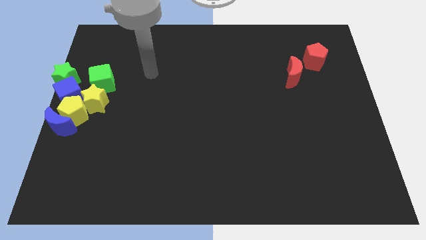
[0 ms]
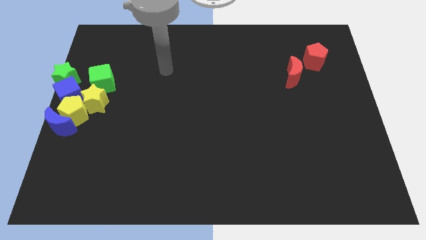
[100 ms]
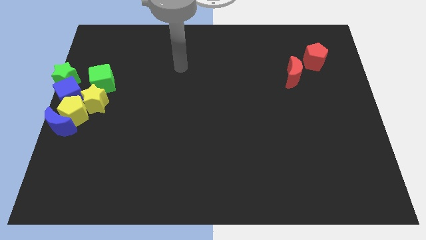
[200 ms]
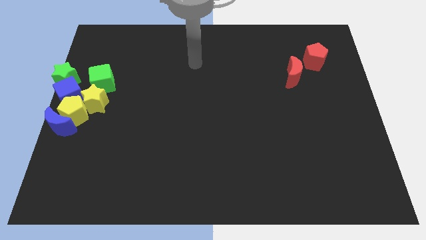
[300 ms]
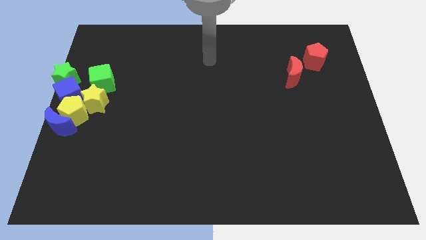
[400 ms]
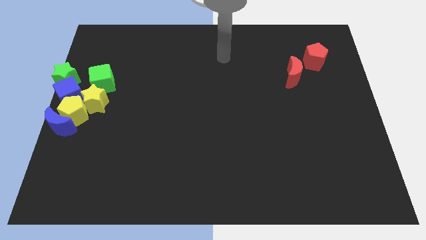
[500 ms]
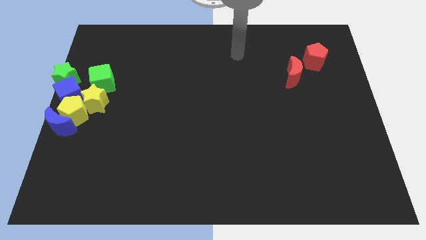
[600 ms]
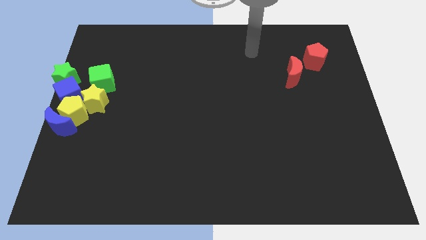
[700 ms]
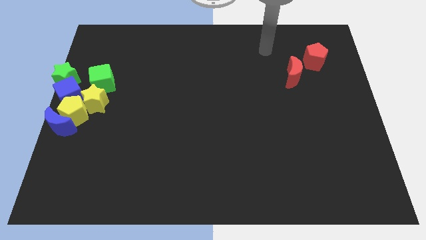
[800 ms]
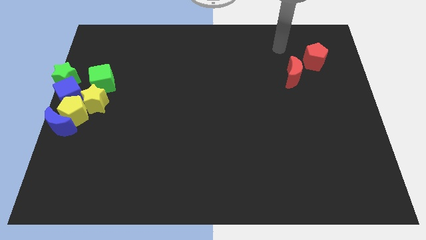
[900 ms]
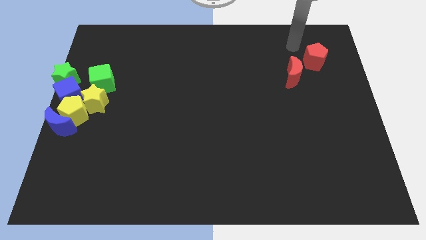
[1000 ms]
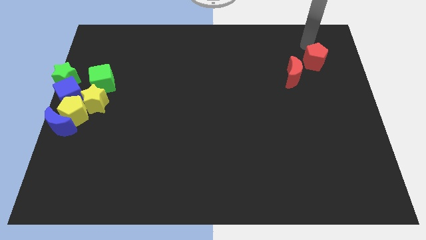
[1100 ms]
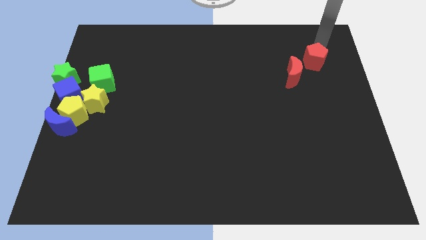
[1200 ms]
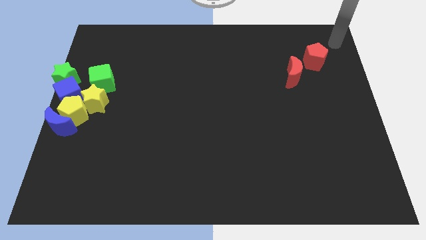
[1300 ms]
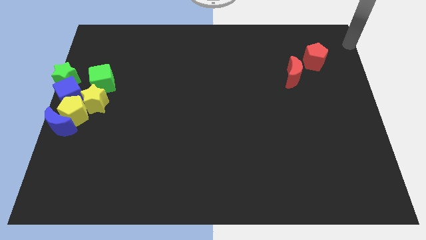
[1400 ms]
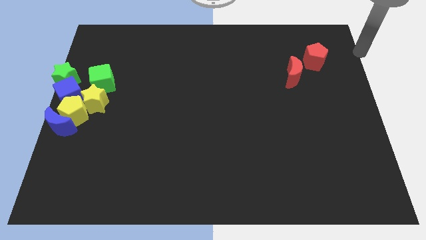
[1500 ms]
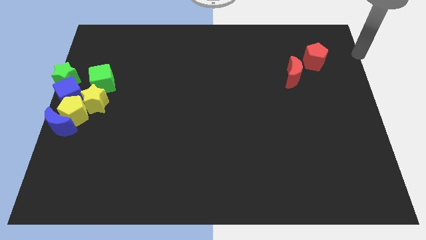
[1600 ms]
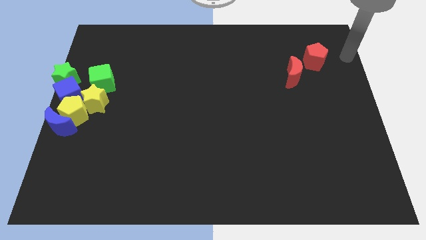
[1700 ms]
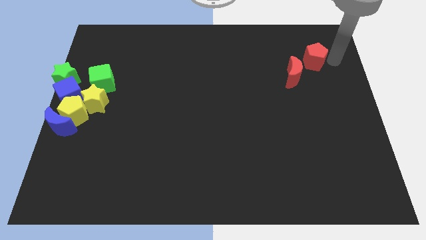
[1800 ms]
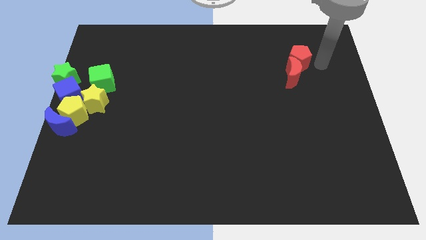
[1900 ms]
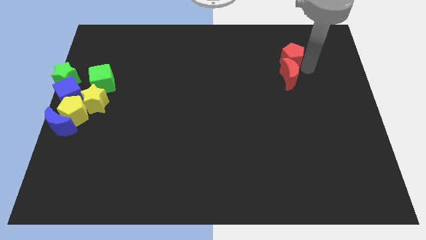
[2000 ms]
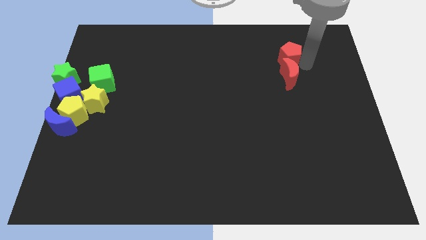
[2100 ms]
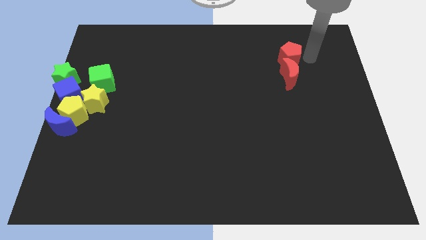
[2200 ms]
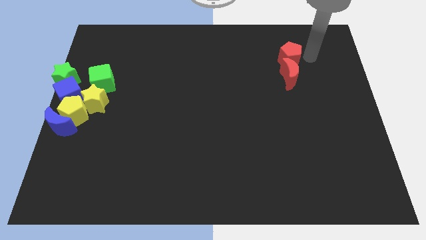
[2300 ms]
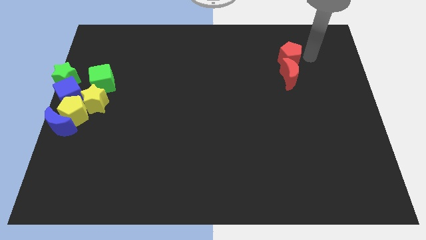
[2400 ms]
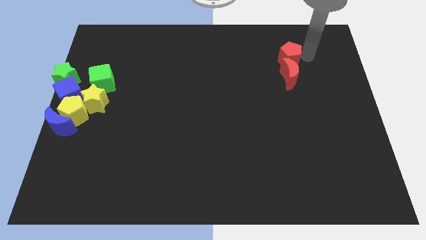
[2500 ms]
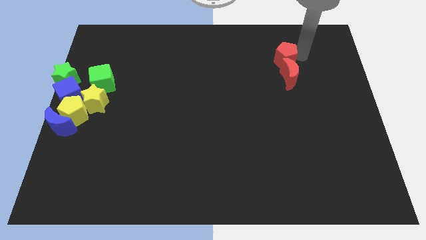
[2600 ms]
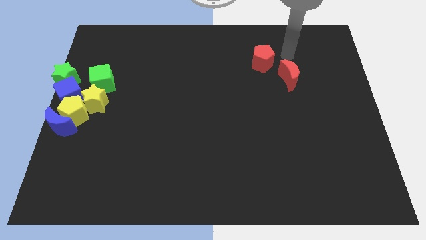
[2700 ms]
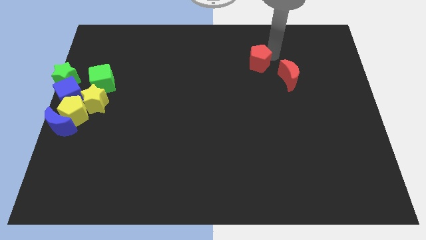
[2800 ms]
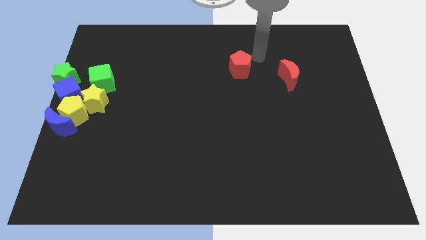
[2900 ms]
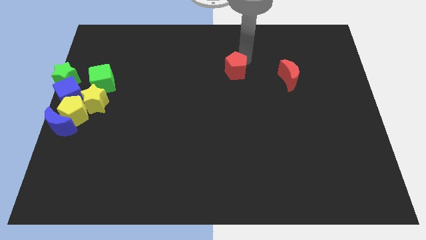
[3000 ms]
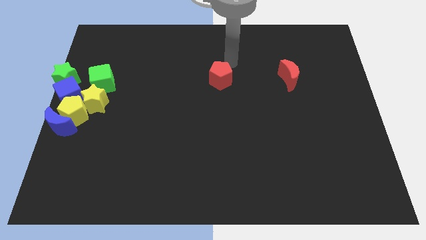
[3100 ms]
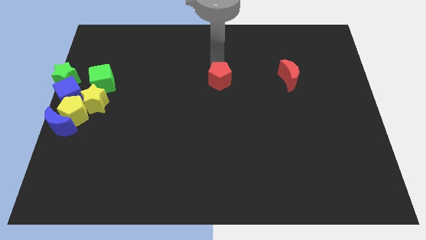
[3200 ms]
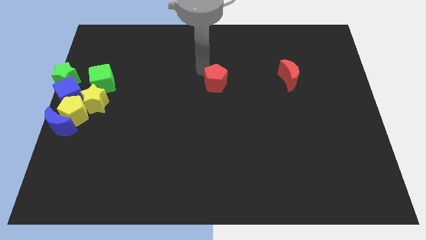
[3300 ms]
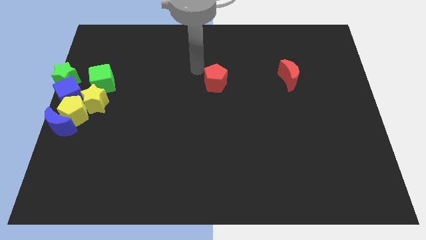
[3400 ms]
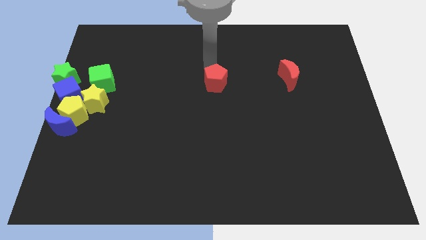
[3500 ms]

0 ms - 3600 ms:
move the red pentagon to the center

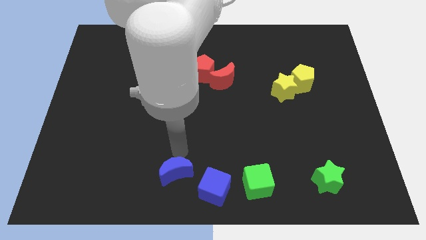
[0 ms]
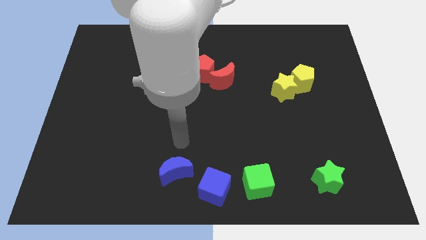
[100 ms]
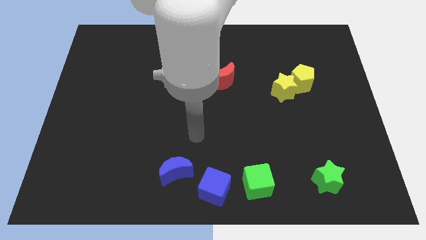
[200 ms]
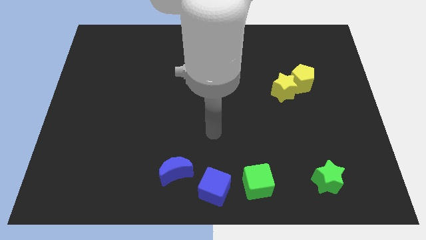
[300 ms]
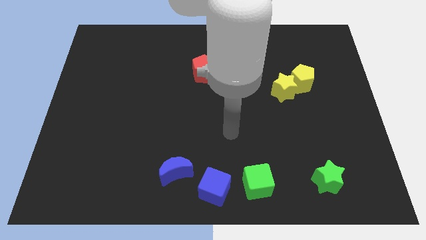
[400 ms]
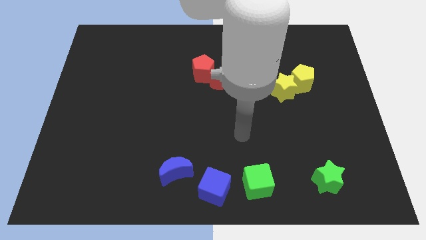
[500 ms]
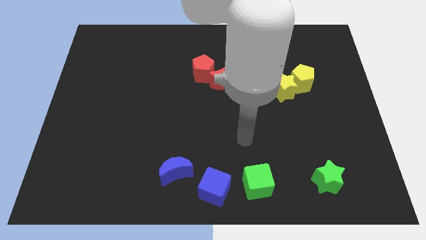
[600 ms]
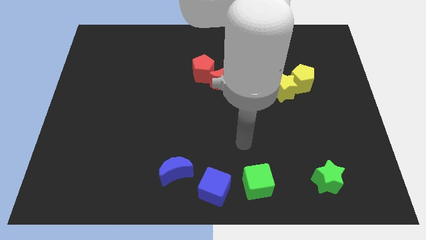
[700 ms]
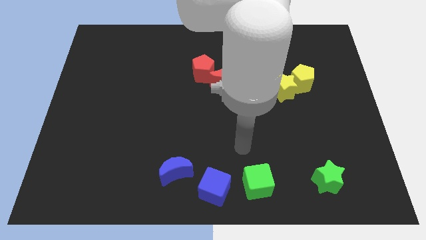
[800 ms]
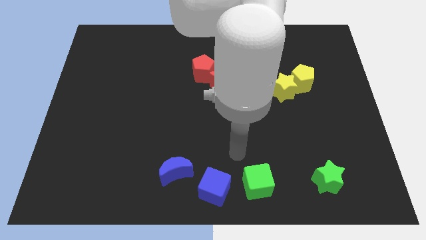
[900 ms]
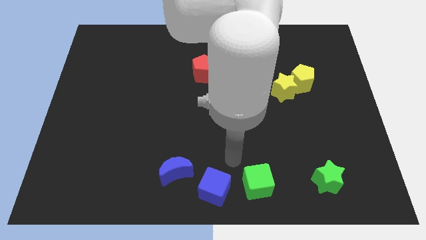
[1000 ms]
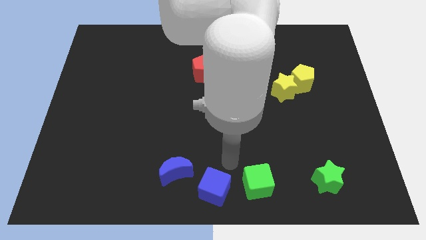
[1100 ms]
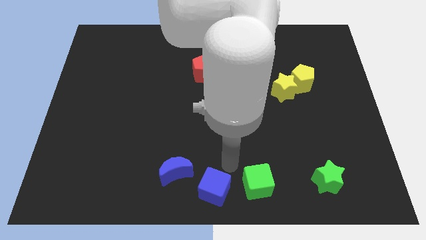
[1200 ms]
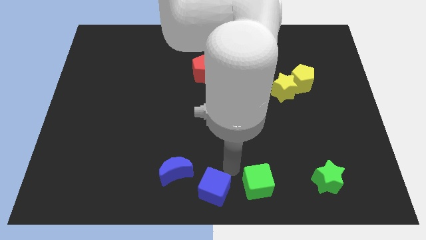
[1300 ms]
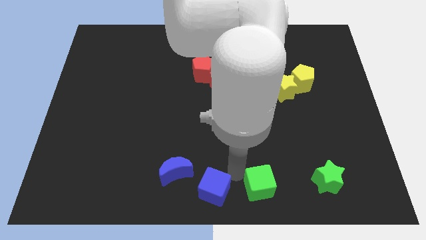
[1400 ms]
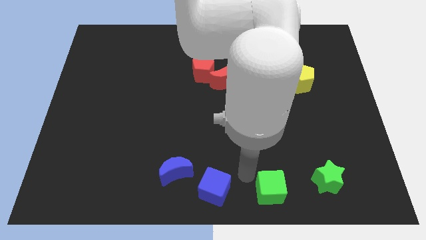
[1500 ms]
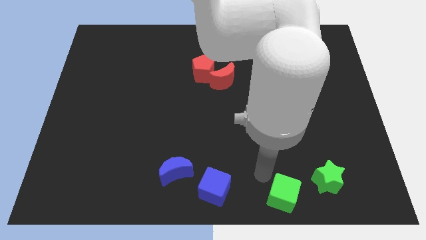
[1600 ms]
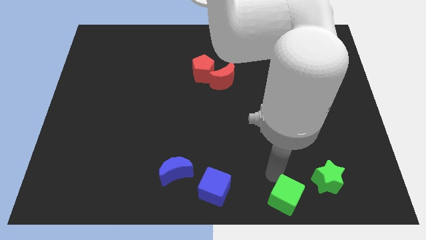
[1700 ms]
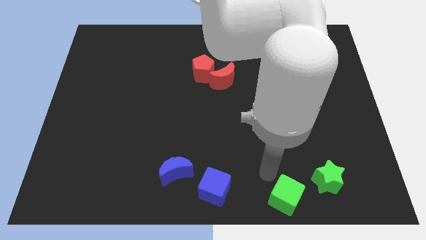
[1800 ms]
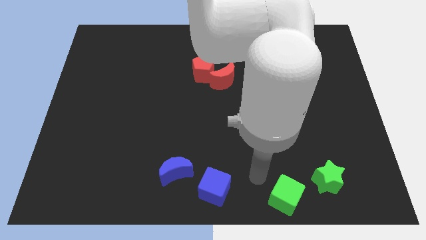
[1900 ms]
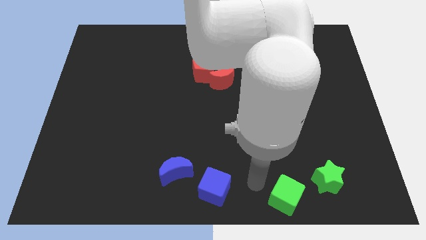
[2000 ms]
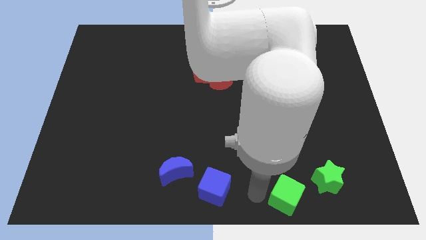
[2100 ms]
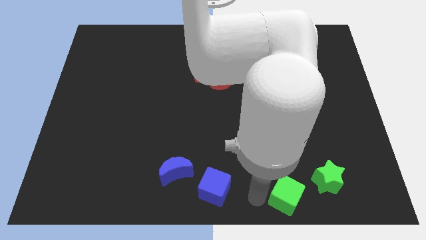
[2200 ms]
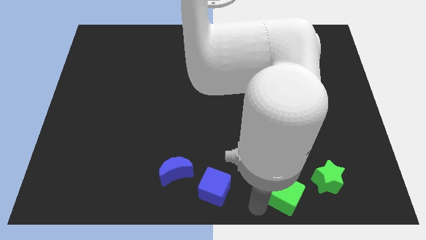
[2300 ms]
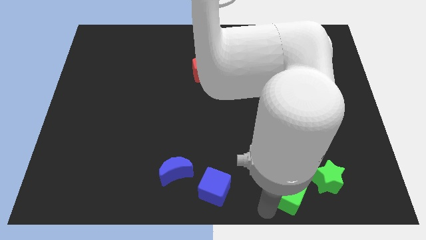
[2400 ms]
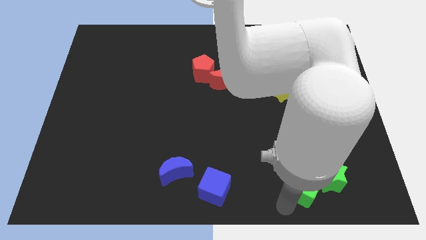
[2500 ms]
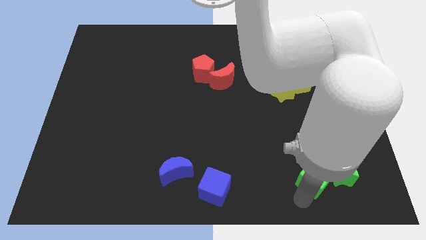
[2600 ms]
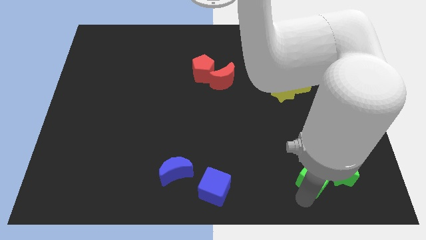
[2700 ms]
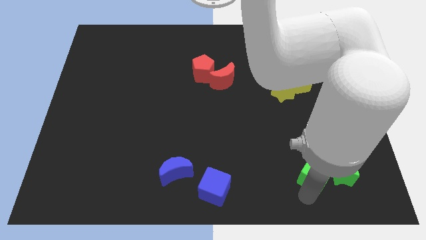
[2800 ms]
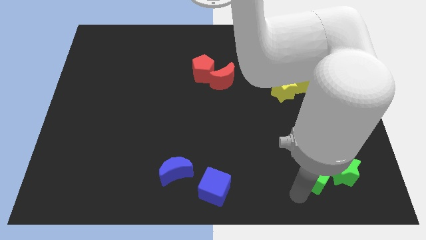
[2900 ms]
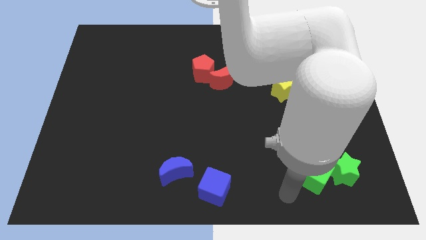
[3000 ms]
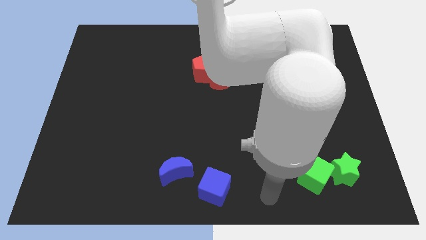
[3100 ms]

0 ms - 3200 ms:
push the green cube into the green star

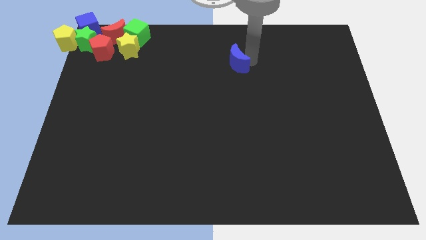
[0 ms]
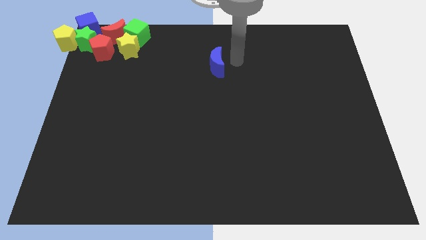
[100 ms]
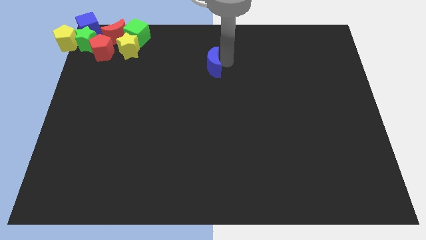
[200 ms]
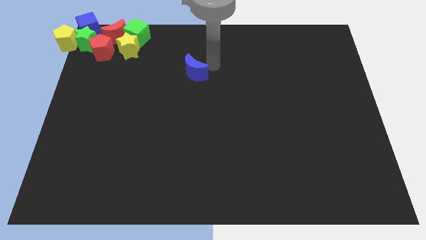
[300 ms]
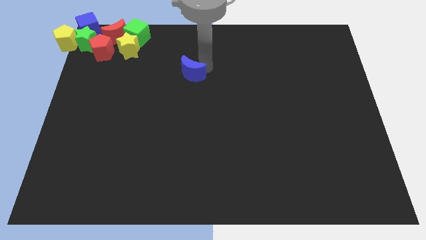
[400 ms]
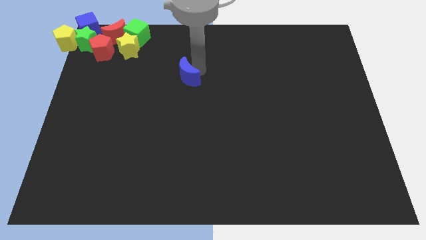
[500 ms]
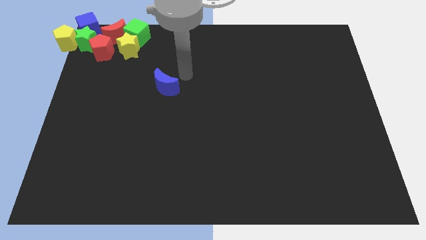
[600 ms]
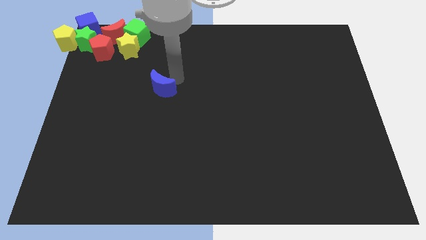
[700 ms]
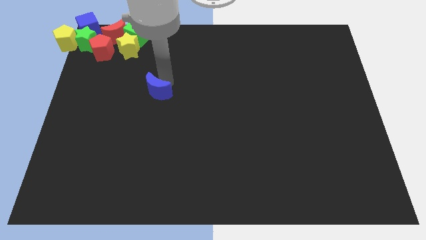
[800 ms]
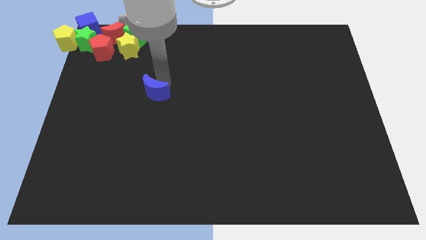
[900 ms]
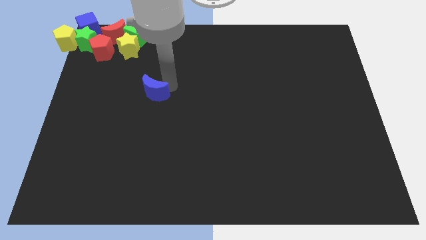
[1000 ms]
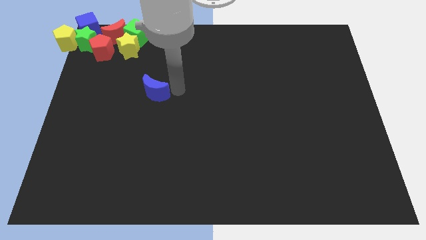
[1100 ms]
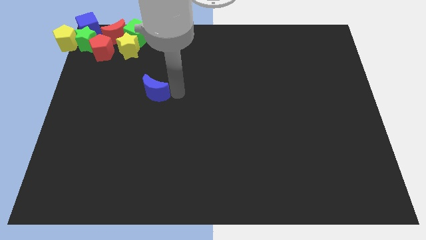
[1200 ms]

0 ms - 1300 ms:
move the blue crescent to the left center of the board

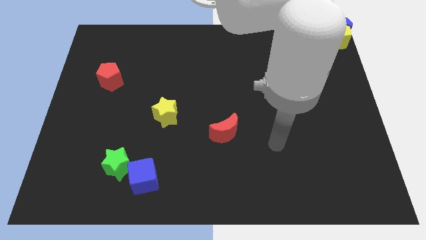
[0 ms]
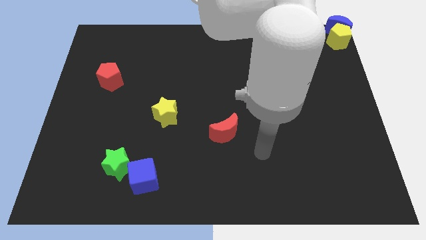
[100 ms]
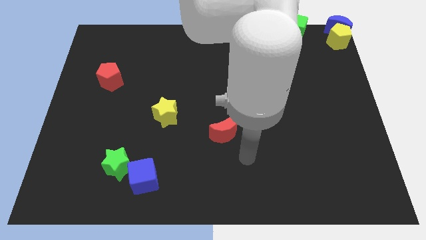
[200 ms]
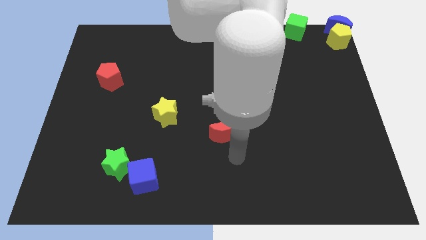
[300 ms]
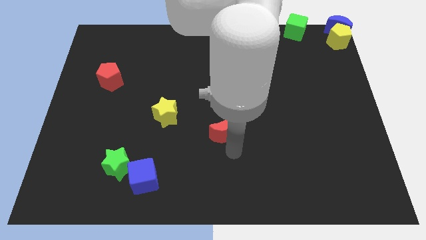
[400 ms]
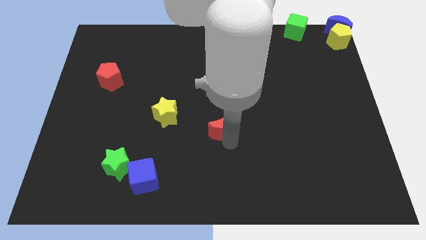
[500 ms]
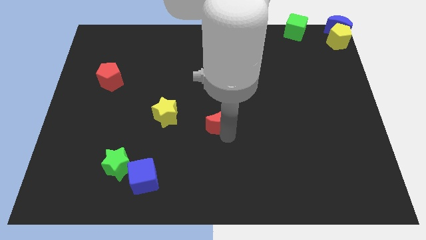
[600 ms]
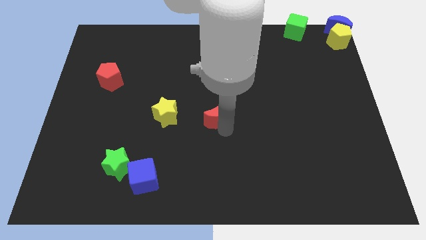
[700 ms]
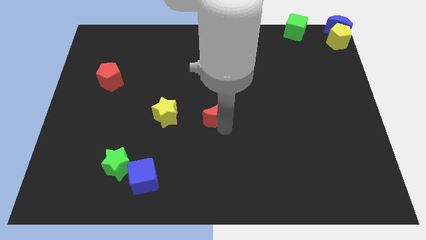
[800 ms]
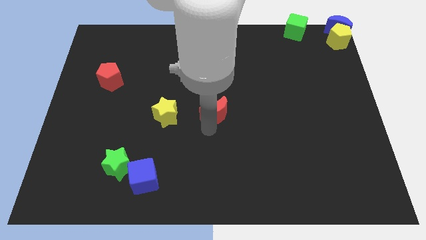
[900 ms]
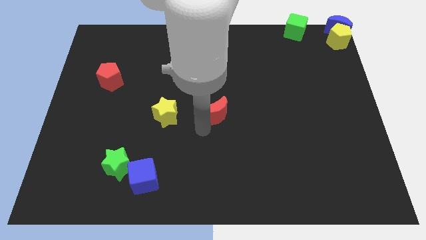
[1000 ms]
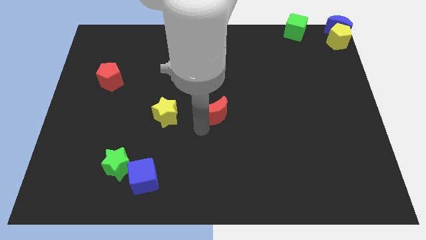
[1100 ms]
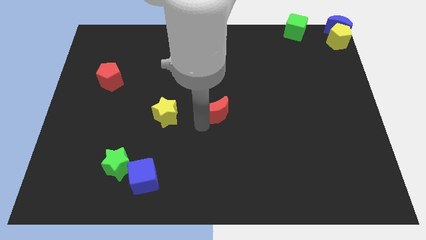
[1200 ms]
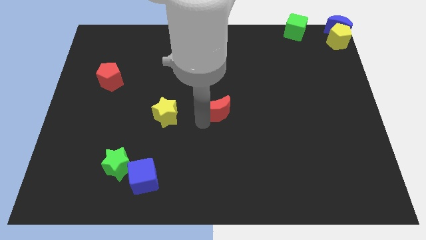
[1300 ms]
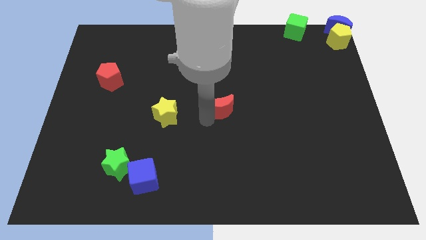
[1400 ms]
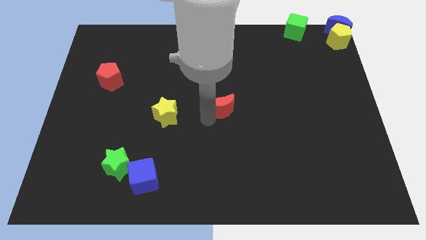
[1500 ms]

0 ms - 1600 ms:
place the red moon right to the yellow star
